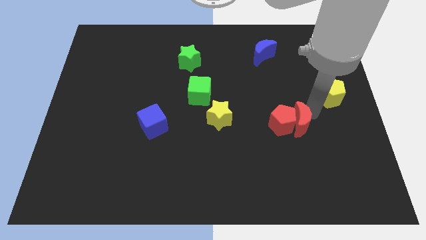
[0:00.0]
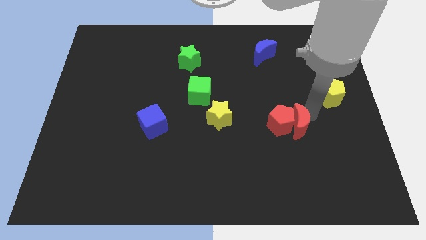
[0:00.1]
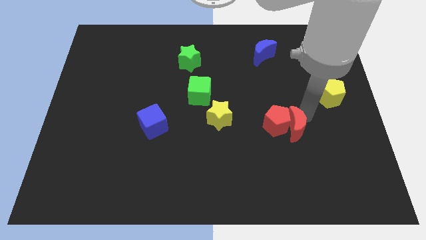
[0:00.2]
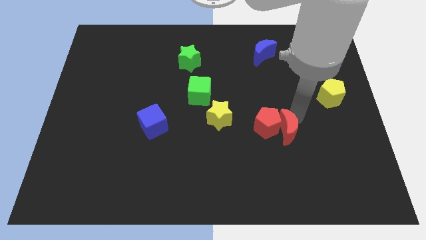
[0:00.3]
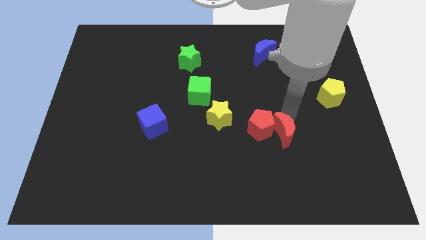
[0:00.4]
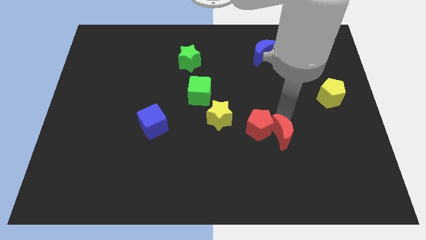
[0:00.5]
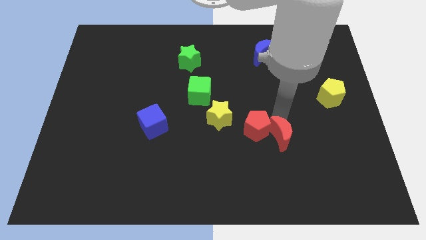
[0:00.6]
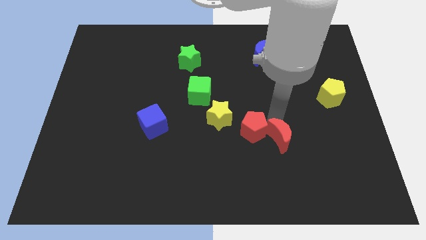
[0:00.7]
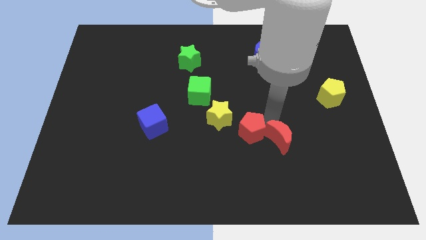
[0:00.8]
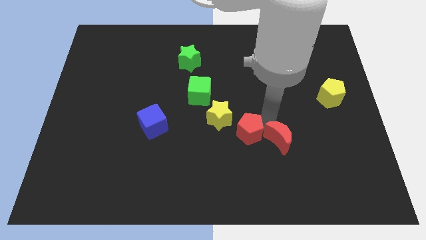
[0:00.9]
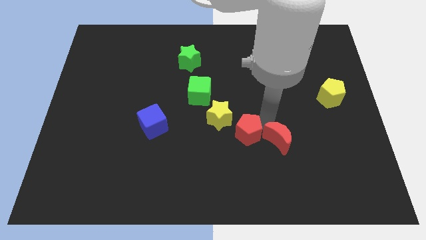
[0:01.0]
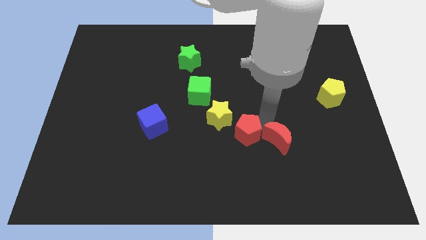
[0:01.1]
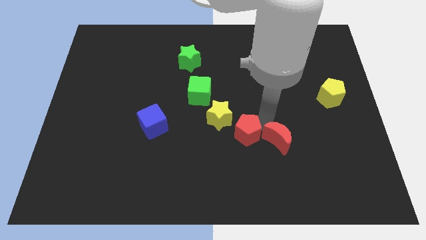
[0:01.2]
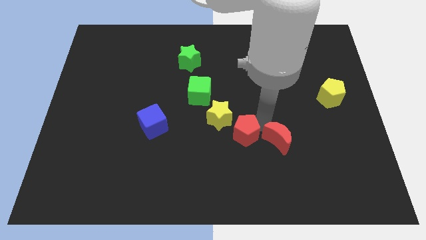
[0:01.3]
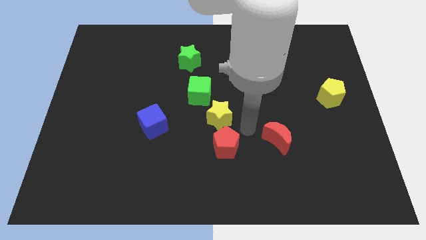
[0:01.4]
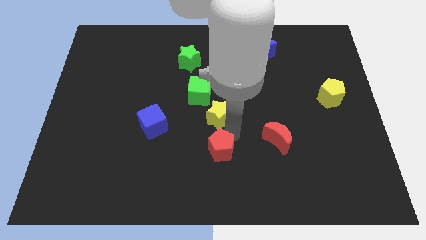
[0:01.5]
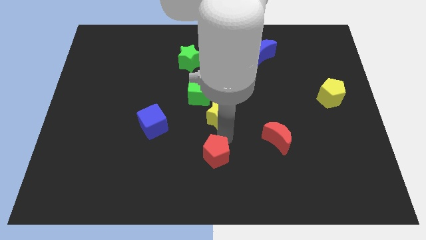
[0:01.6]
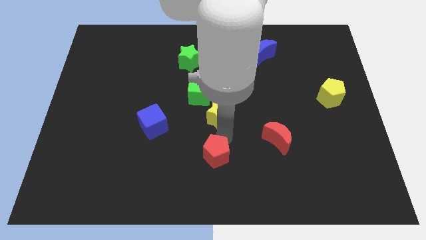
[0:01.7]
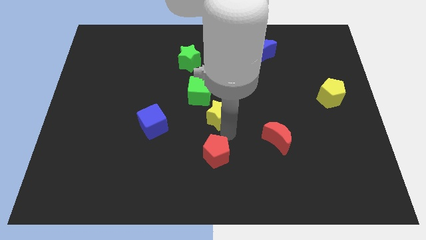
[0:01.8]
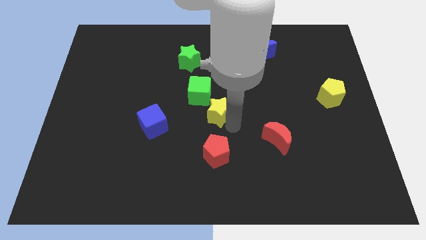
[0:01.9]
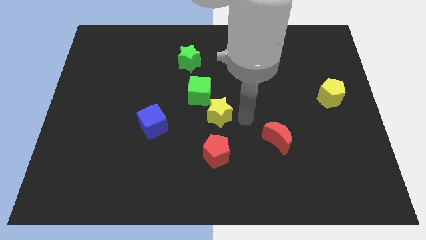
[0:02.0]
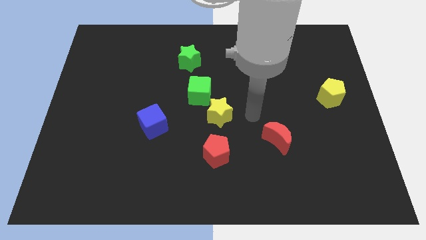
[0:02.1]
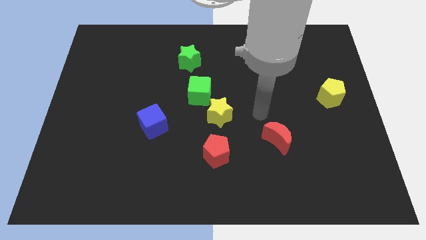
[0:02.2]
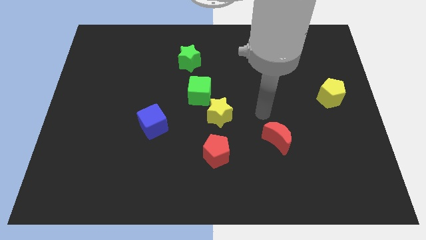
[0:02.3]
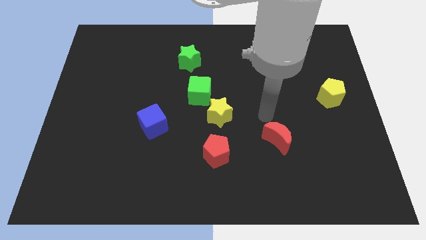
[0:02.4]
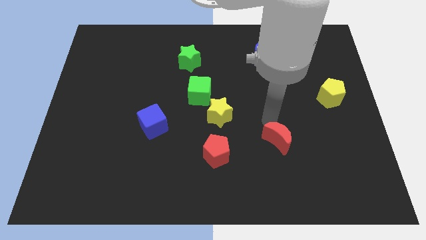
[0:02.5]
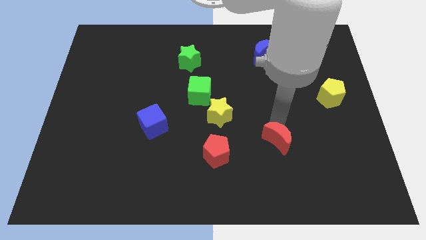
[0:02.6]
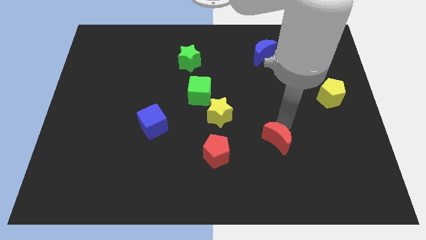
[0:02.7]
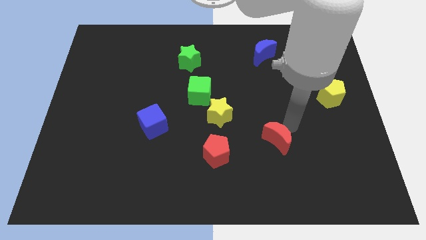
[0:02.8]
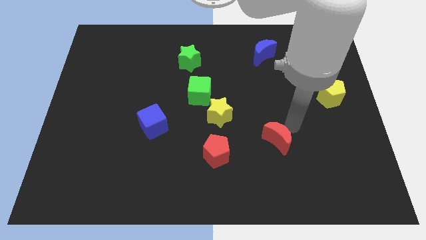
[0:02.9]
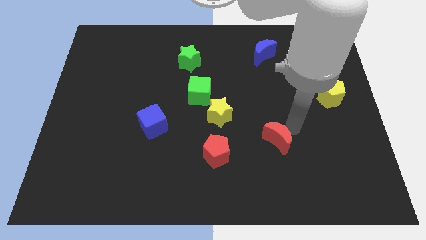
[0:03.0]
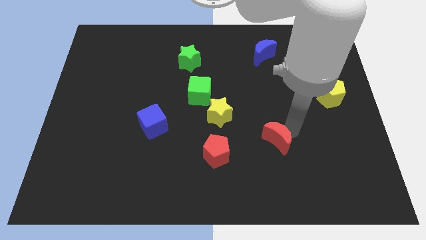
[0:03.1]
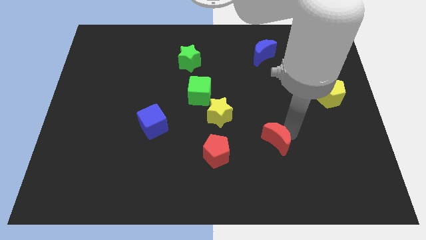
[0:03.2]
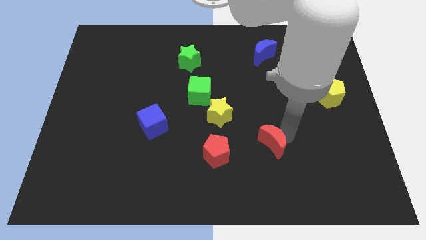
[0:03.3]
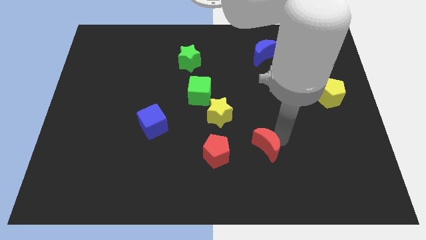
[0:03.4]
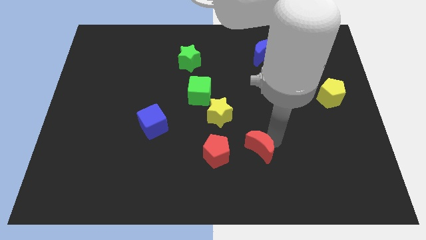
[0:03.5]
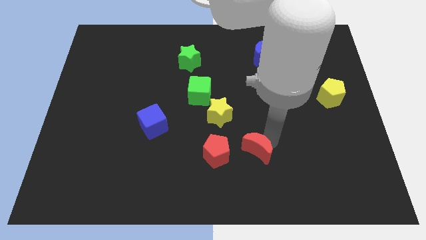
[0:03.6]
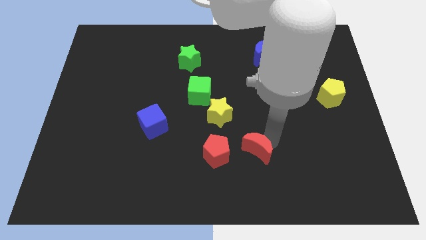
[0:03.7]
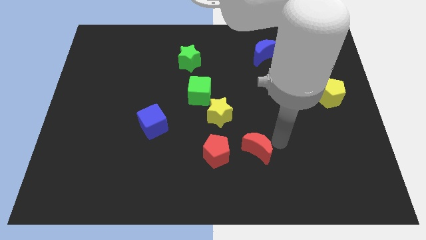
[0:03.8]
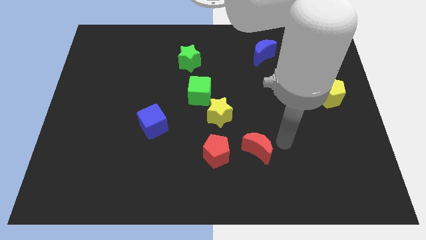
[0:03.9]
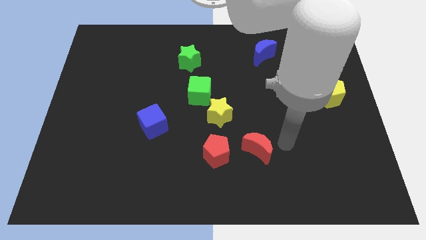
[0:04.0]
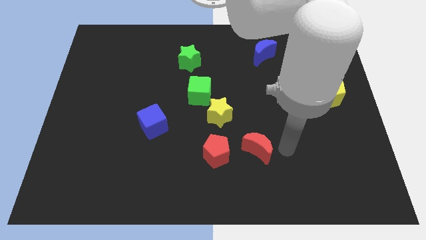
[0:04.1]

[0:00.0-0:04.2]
place the red blocks downwards

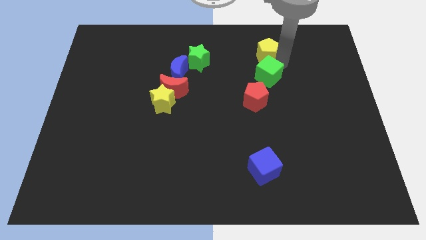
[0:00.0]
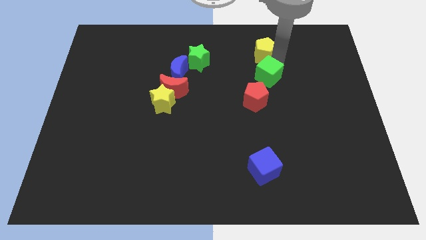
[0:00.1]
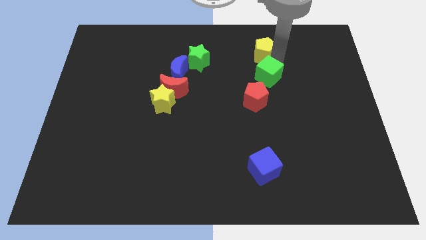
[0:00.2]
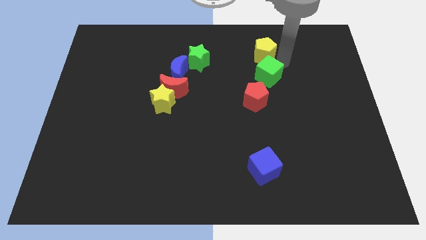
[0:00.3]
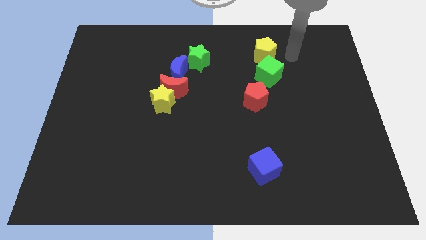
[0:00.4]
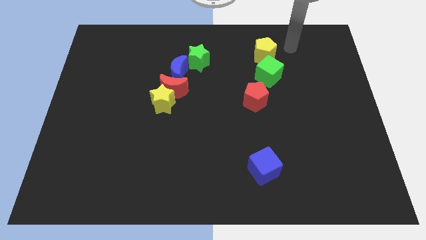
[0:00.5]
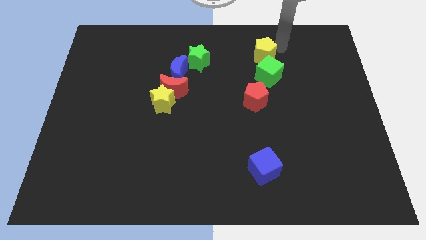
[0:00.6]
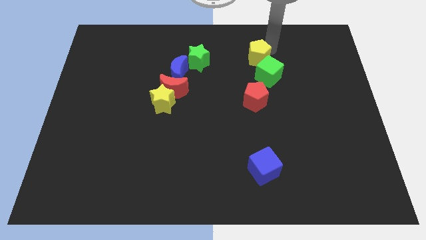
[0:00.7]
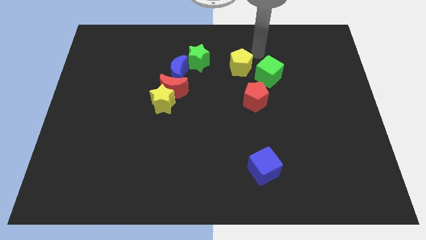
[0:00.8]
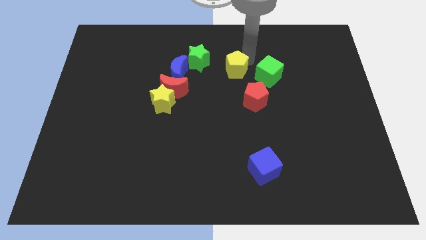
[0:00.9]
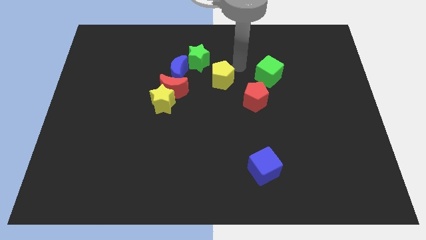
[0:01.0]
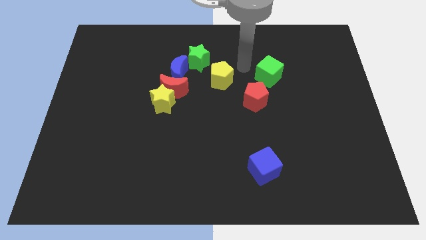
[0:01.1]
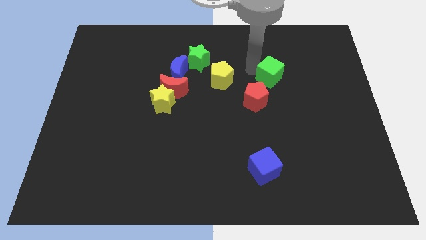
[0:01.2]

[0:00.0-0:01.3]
place the yellow pentagon in between the red pentagon and the green star

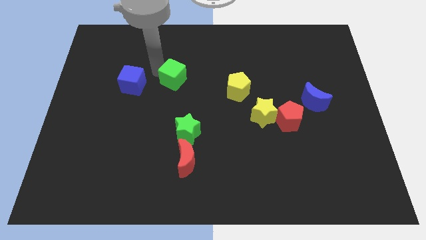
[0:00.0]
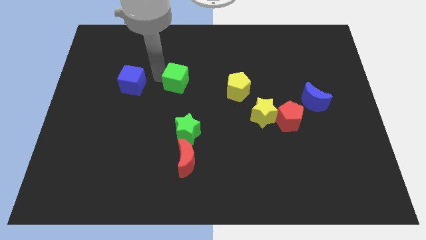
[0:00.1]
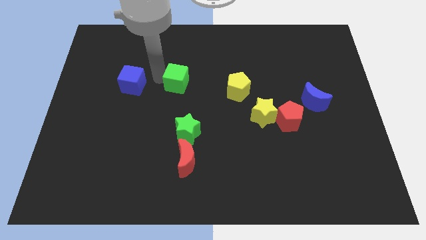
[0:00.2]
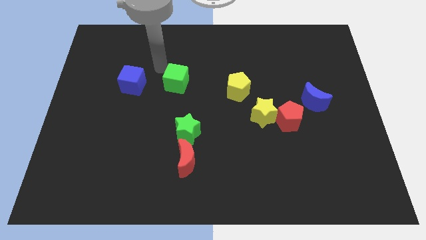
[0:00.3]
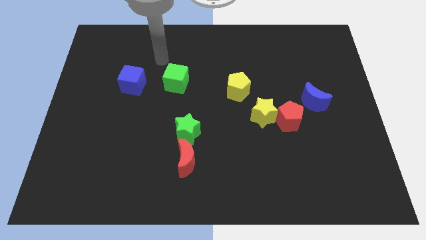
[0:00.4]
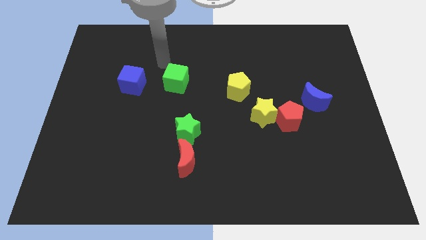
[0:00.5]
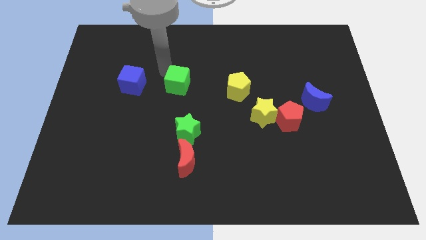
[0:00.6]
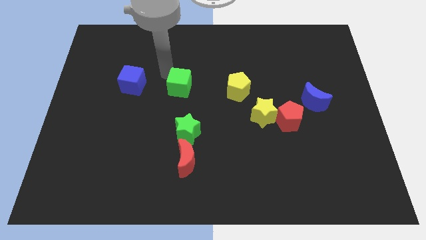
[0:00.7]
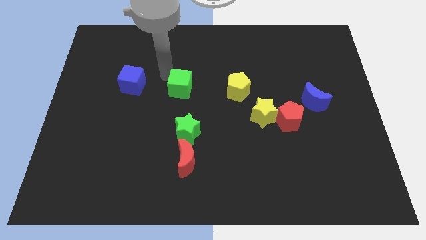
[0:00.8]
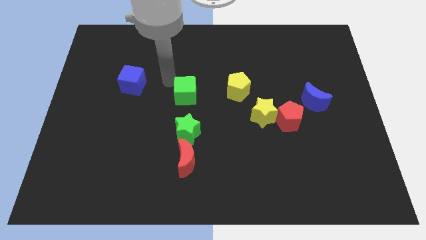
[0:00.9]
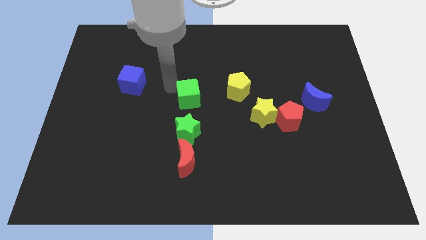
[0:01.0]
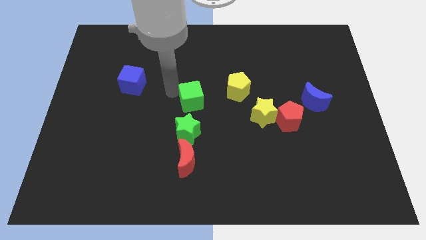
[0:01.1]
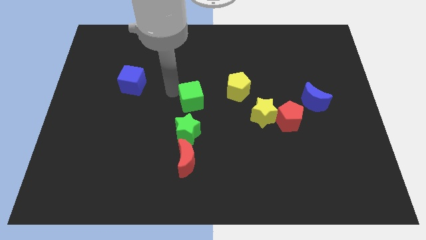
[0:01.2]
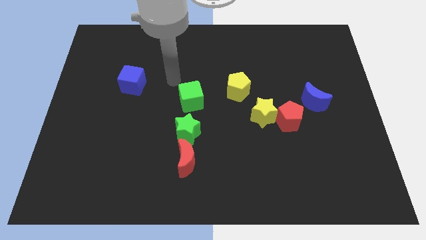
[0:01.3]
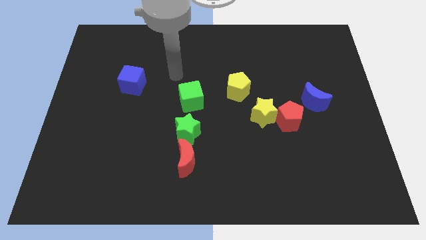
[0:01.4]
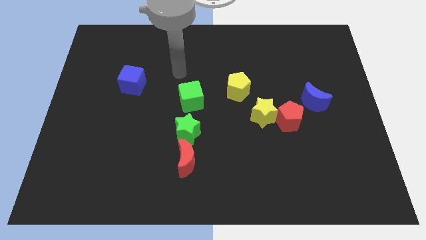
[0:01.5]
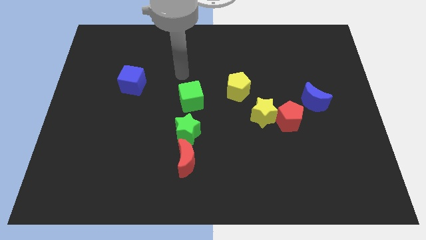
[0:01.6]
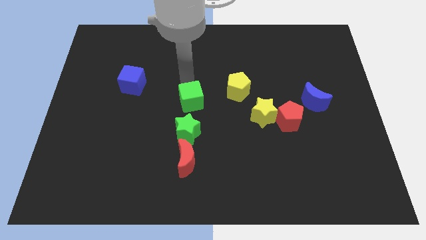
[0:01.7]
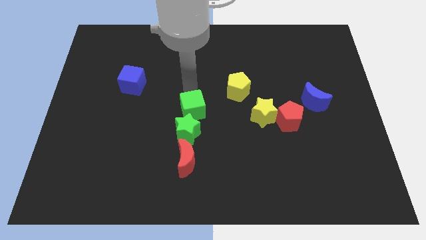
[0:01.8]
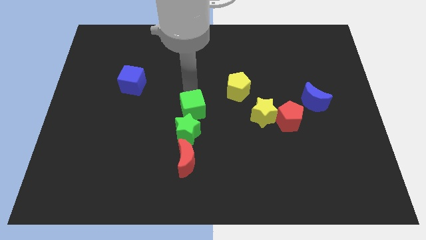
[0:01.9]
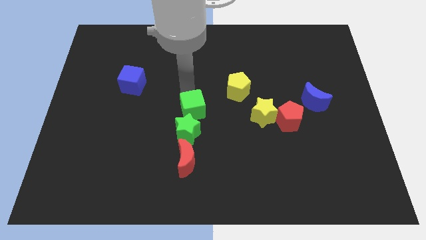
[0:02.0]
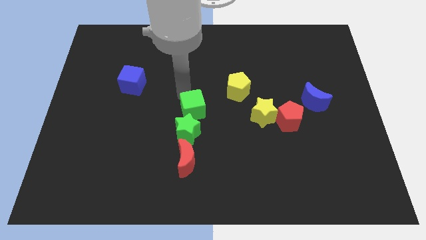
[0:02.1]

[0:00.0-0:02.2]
place the green cube to the top side of the green star

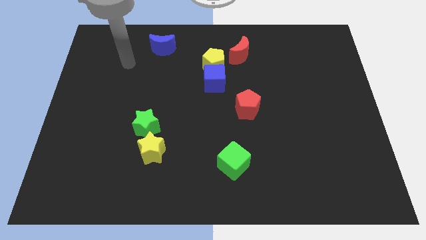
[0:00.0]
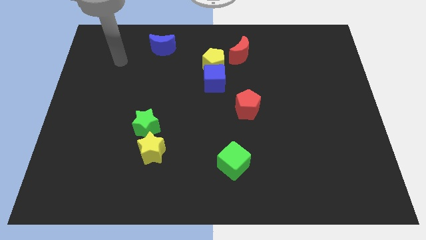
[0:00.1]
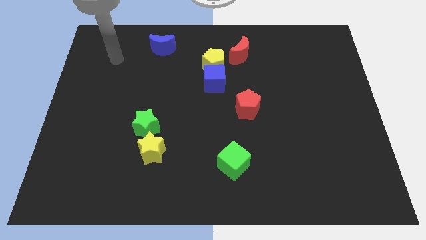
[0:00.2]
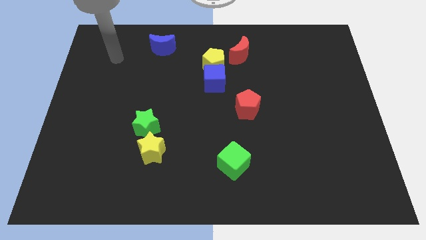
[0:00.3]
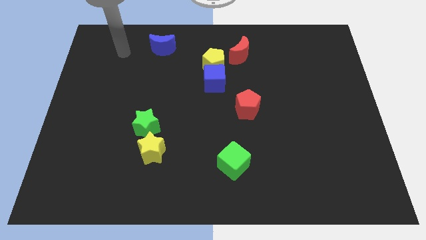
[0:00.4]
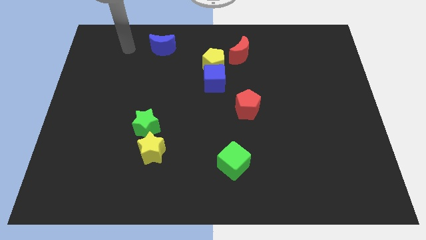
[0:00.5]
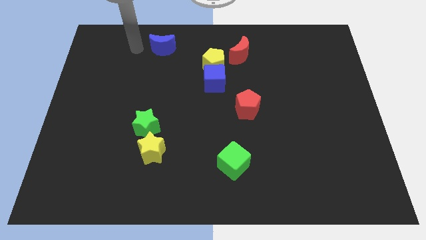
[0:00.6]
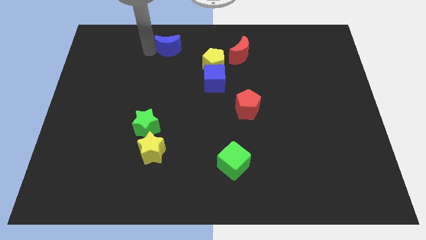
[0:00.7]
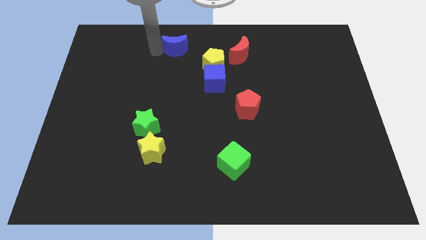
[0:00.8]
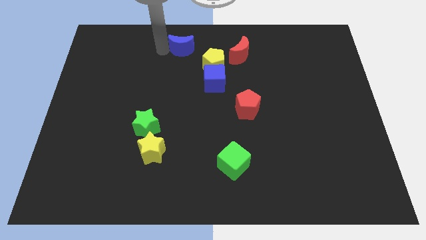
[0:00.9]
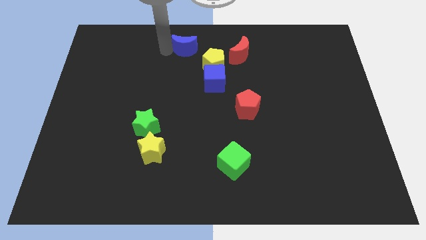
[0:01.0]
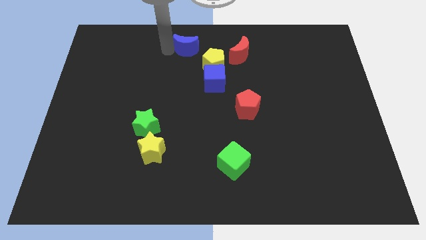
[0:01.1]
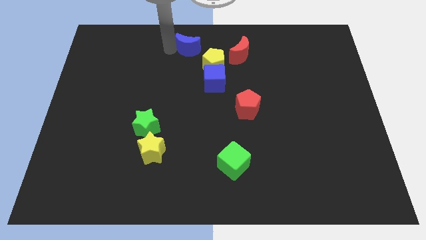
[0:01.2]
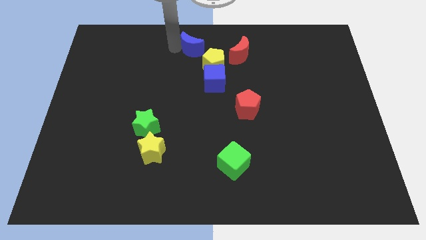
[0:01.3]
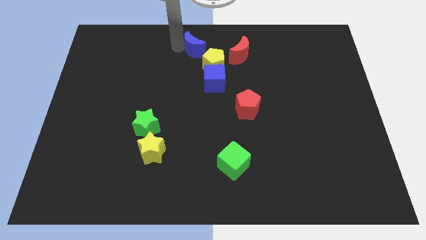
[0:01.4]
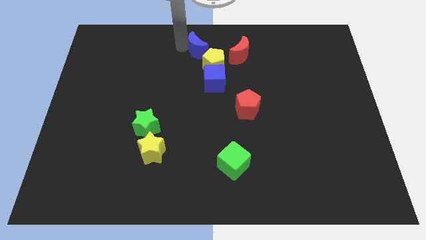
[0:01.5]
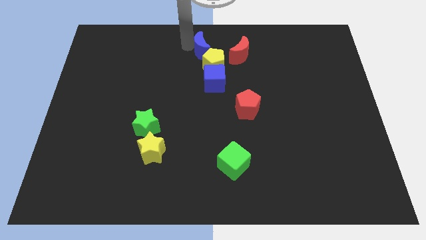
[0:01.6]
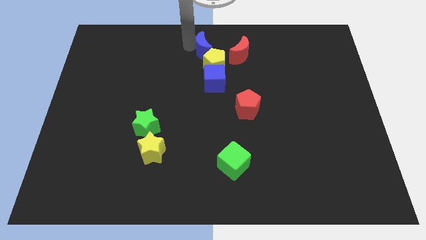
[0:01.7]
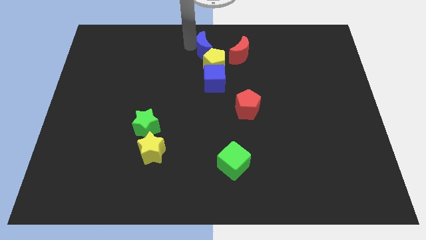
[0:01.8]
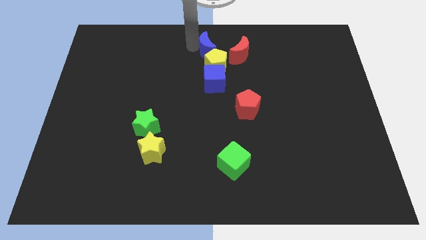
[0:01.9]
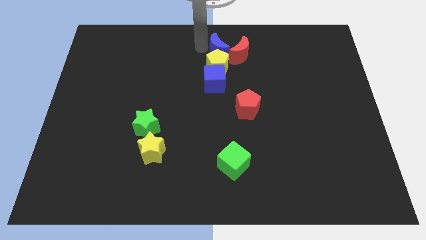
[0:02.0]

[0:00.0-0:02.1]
move the blue moon into yellow pentagon on top
